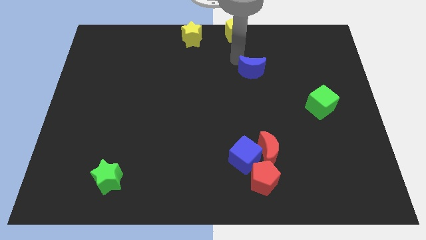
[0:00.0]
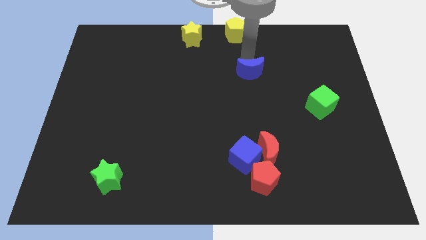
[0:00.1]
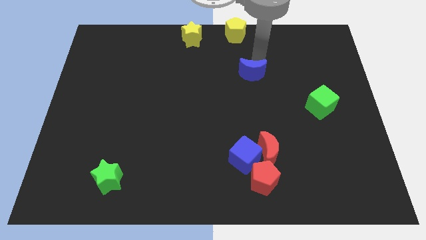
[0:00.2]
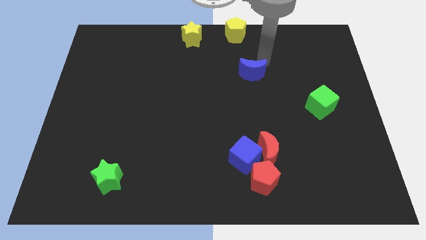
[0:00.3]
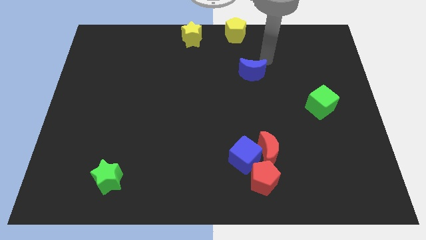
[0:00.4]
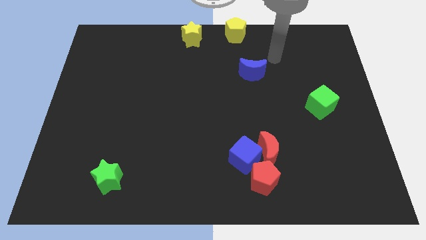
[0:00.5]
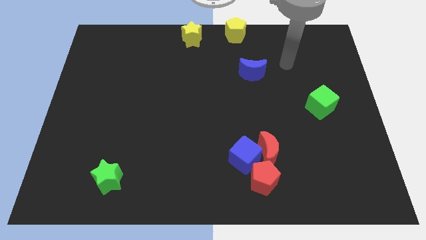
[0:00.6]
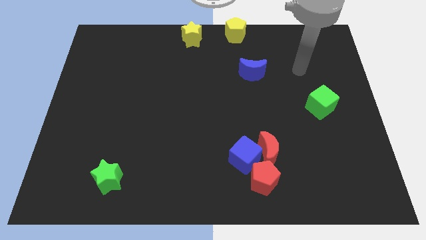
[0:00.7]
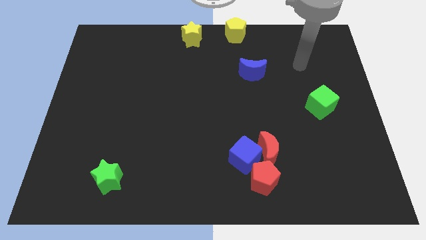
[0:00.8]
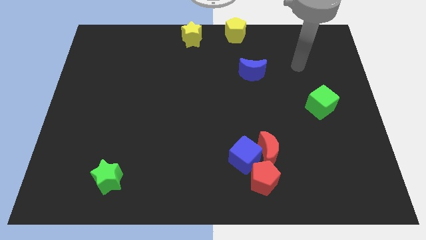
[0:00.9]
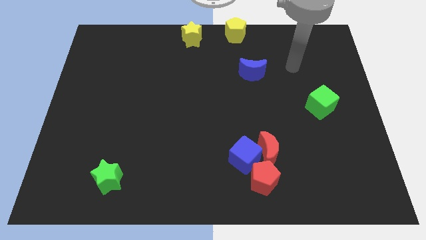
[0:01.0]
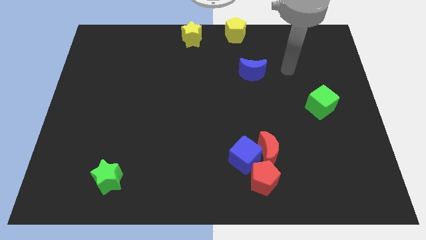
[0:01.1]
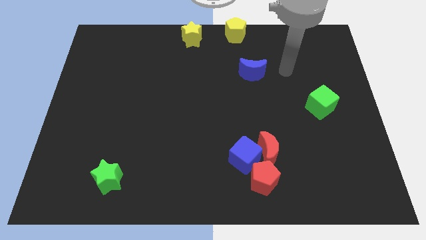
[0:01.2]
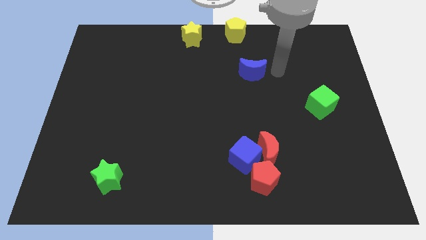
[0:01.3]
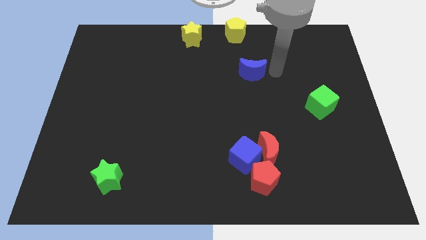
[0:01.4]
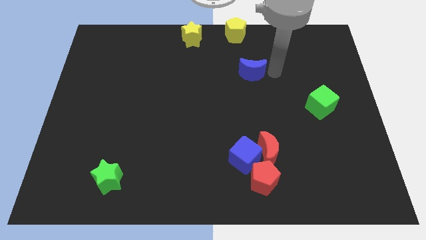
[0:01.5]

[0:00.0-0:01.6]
place the blue crescent below the yellow pentagon

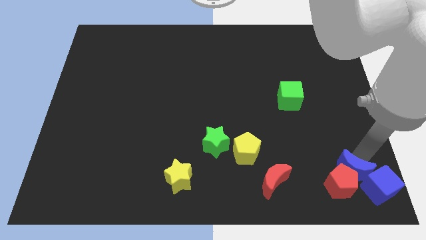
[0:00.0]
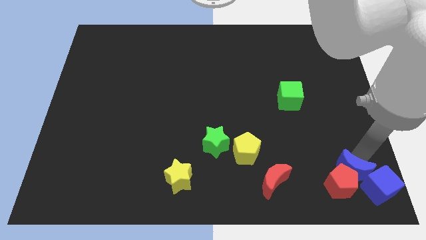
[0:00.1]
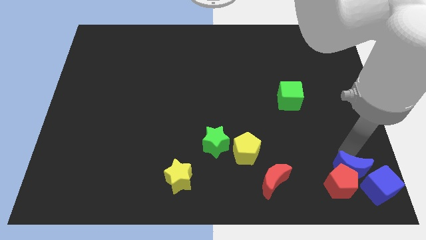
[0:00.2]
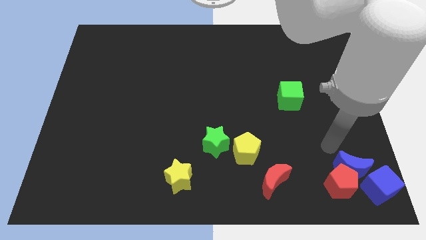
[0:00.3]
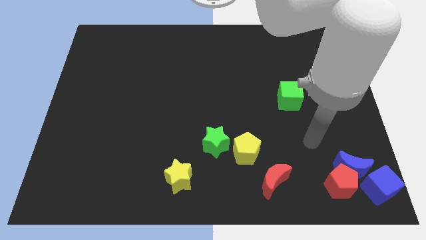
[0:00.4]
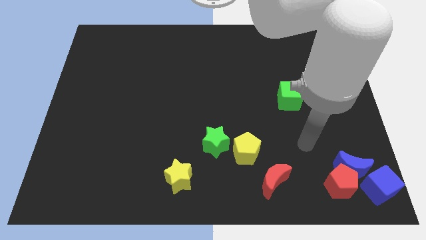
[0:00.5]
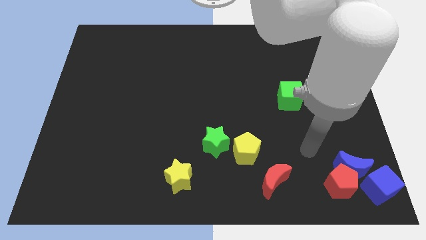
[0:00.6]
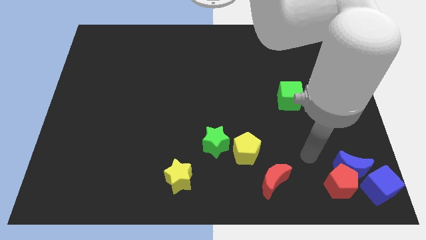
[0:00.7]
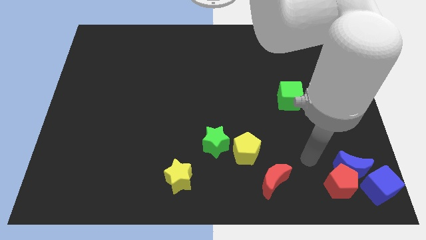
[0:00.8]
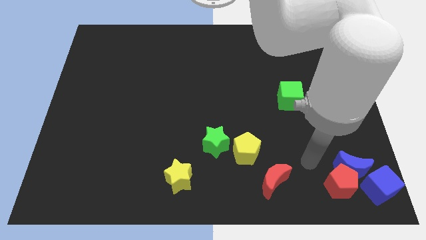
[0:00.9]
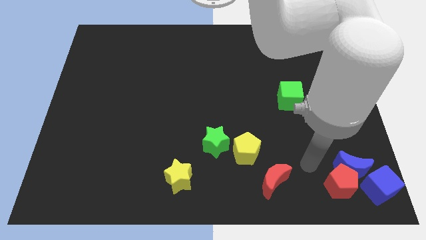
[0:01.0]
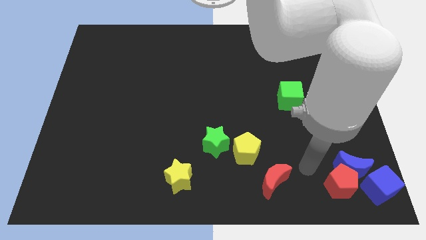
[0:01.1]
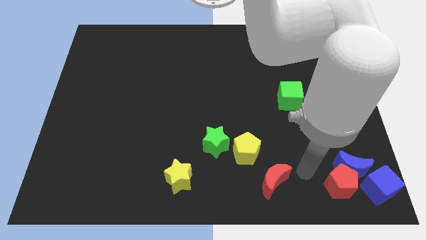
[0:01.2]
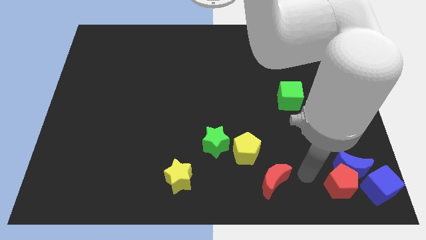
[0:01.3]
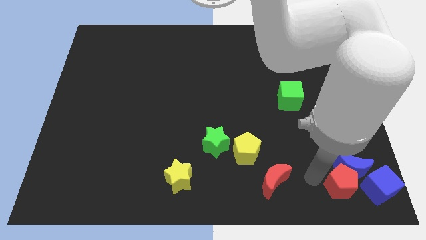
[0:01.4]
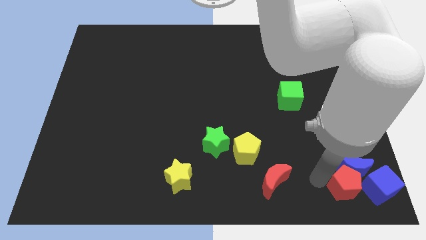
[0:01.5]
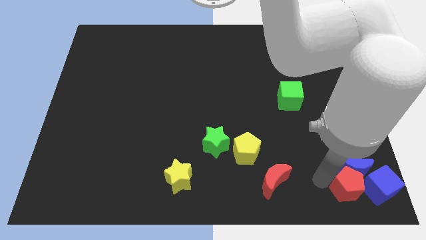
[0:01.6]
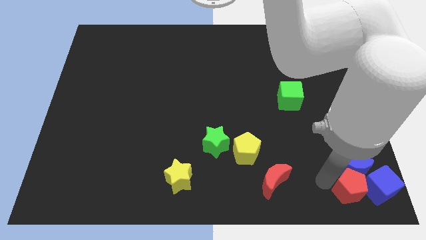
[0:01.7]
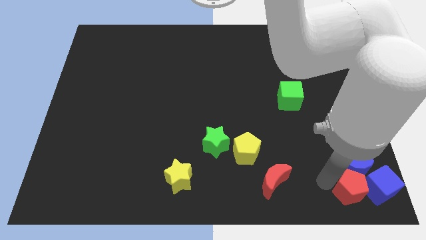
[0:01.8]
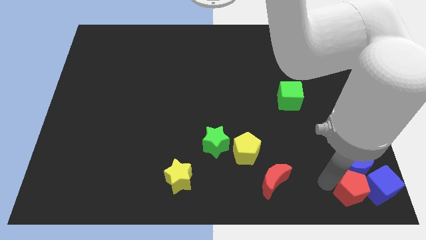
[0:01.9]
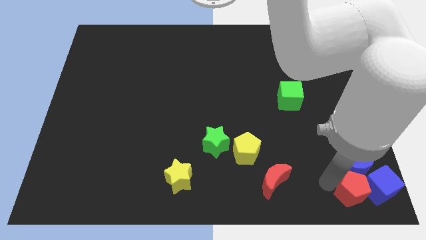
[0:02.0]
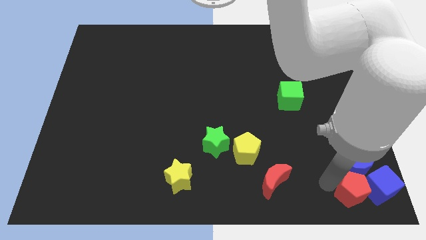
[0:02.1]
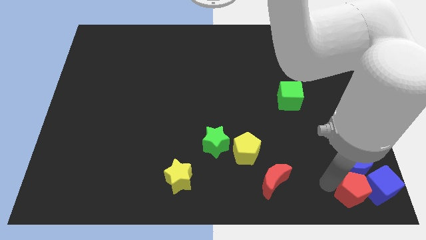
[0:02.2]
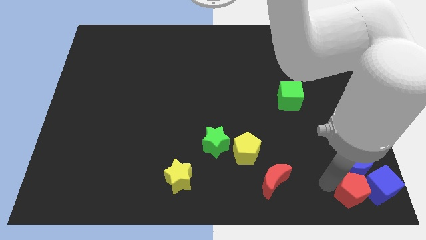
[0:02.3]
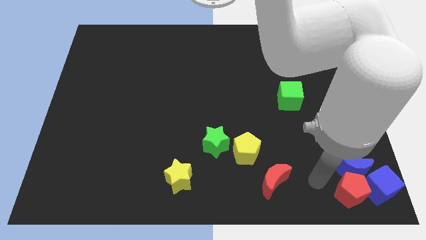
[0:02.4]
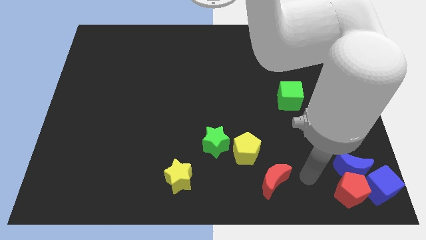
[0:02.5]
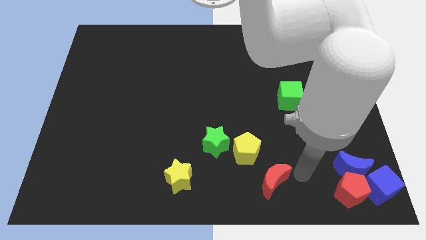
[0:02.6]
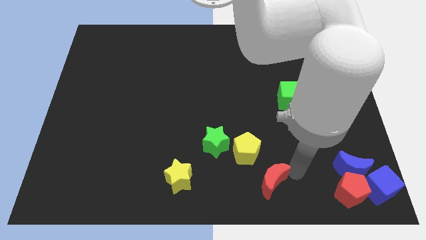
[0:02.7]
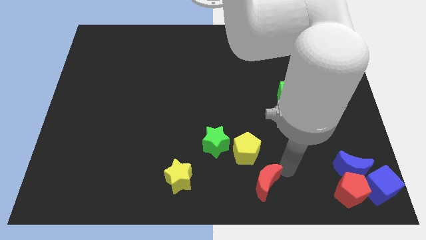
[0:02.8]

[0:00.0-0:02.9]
push red pentagon into blue cube

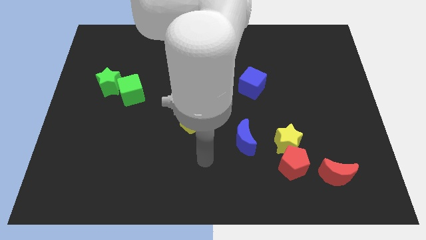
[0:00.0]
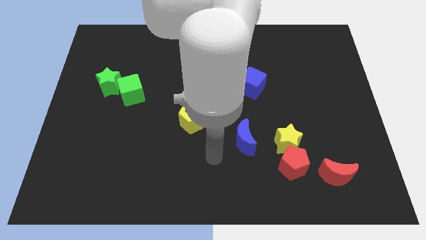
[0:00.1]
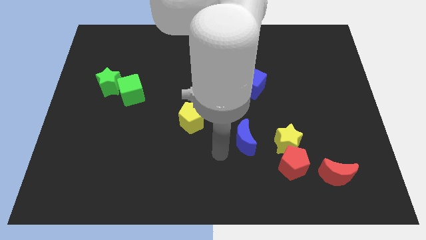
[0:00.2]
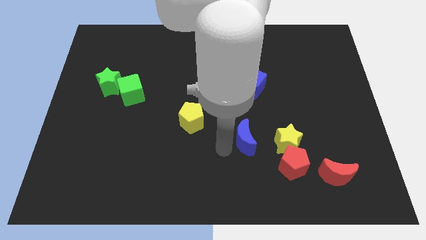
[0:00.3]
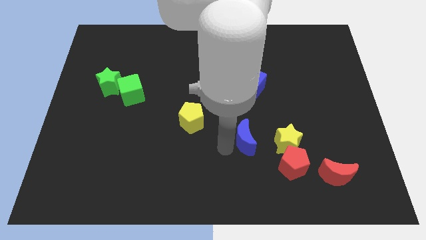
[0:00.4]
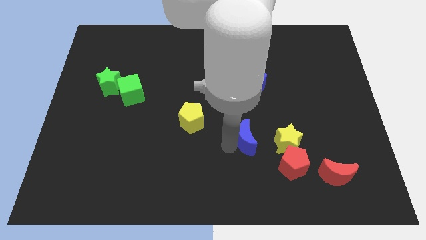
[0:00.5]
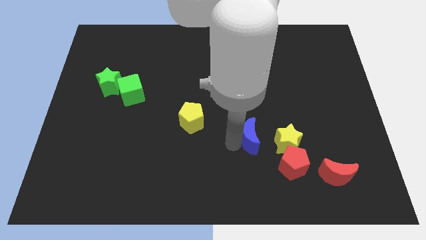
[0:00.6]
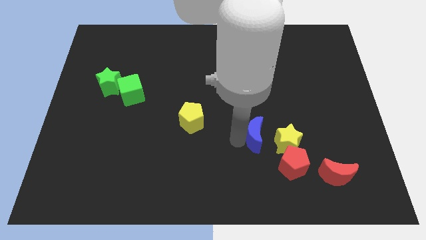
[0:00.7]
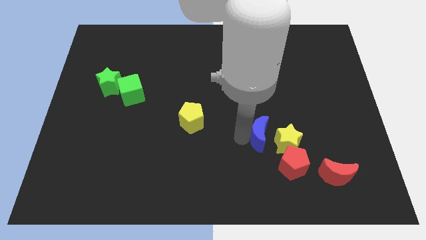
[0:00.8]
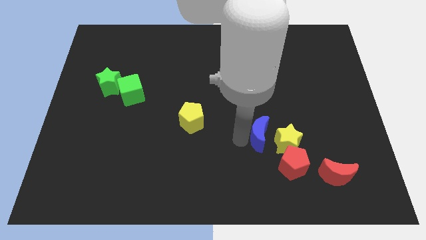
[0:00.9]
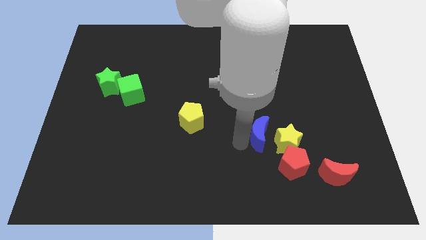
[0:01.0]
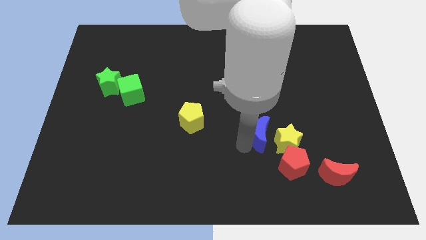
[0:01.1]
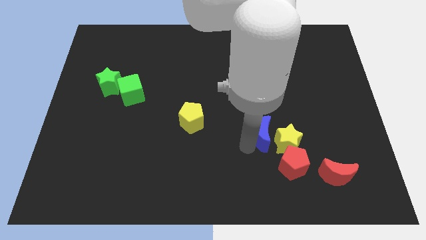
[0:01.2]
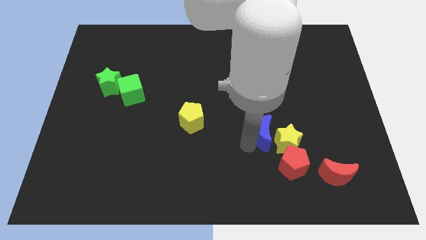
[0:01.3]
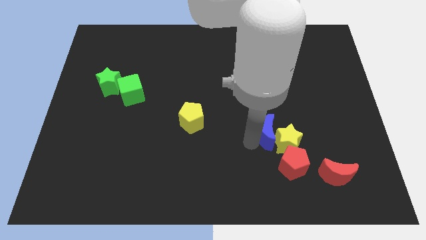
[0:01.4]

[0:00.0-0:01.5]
push the blue crescent into the yellow star

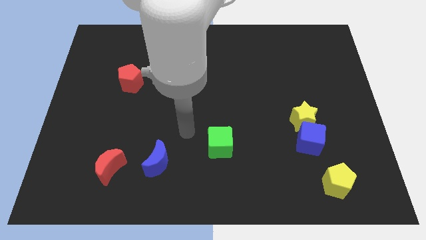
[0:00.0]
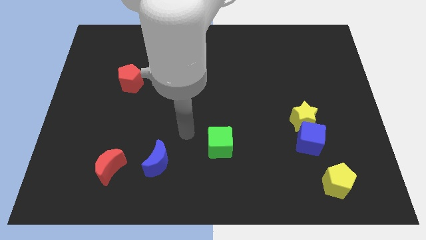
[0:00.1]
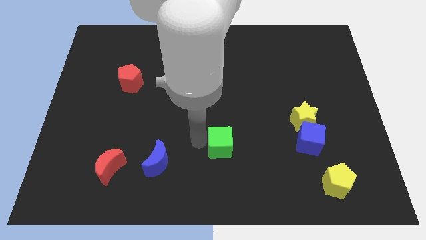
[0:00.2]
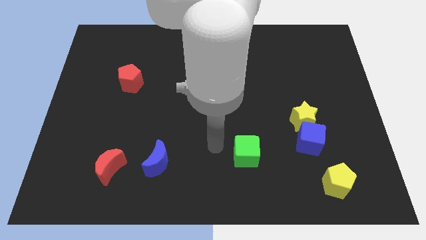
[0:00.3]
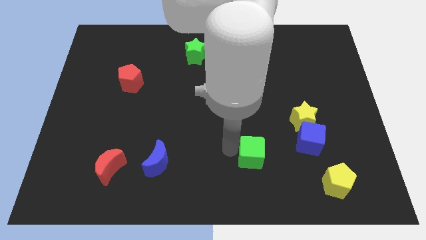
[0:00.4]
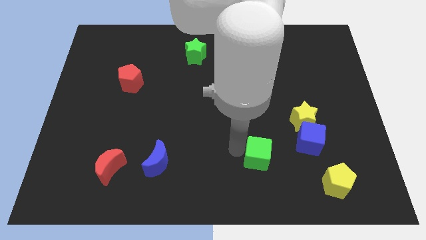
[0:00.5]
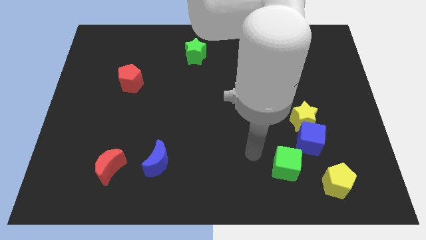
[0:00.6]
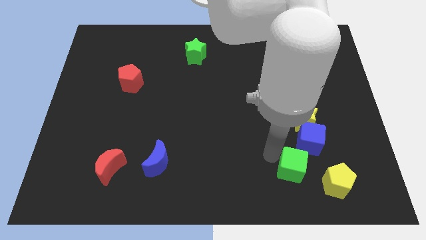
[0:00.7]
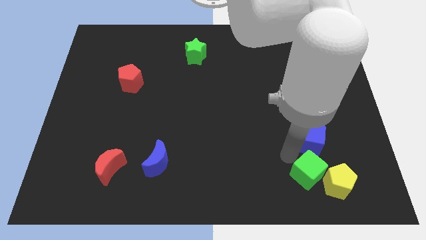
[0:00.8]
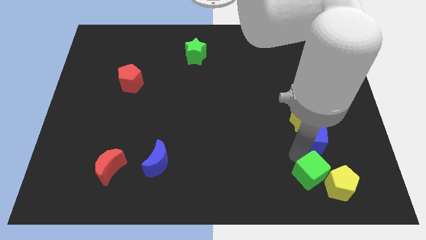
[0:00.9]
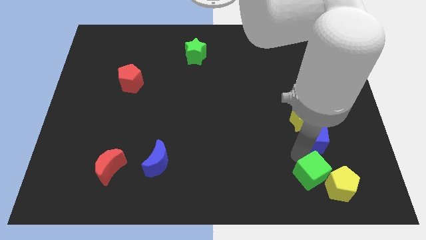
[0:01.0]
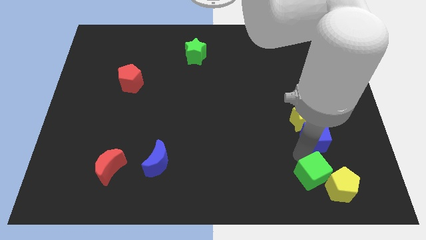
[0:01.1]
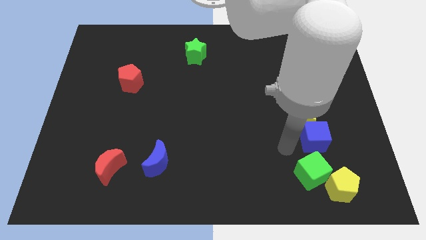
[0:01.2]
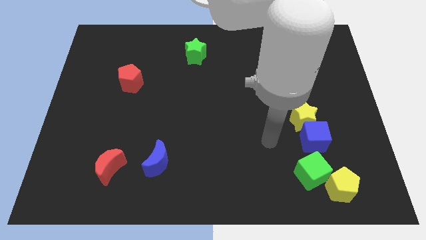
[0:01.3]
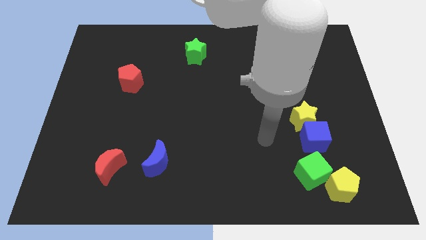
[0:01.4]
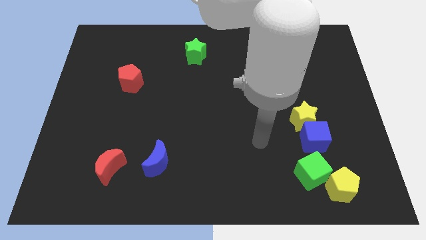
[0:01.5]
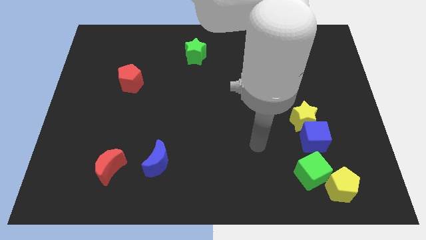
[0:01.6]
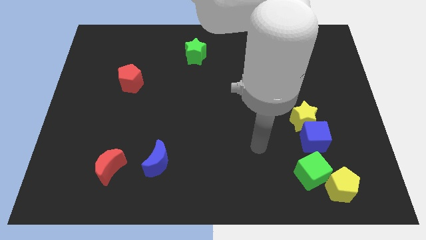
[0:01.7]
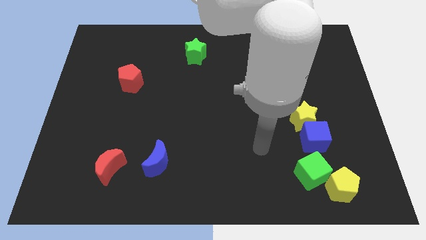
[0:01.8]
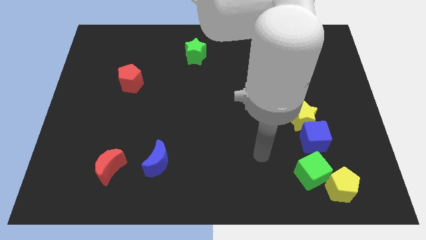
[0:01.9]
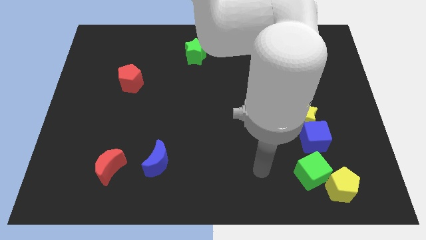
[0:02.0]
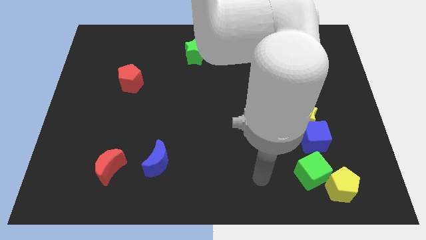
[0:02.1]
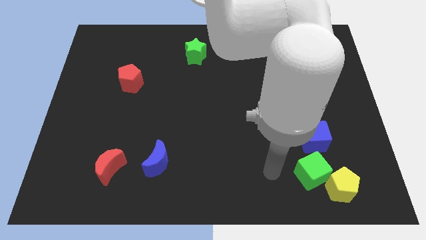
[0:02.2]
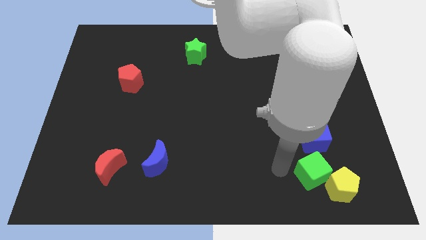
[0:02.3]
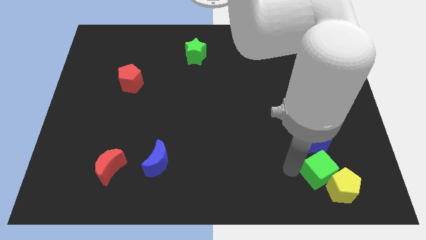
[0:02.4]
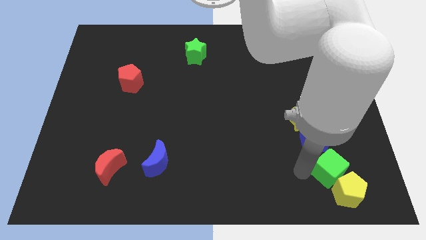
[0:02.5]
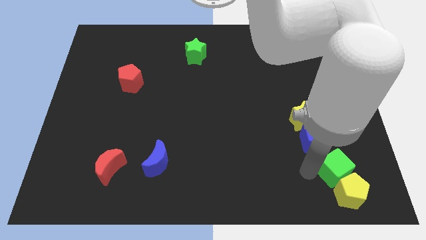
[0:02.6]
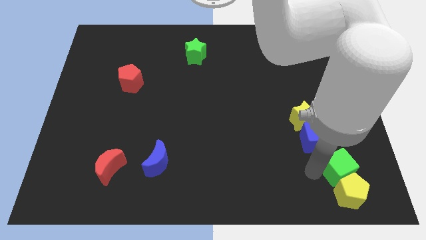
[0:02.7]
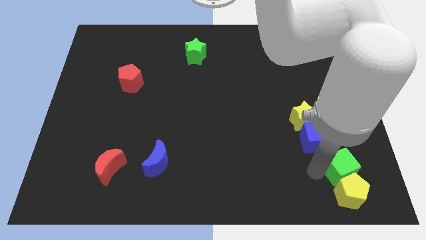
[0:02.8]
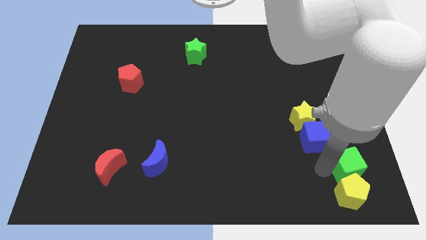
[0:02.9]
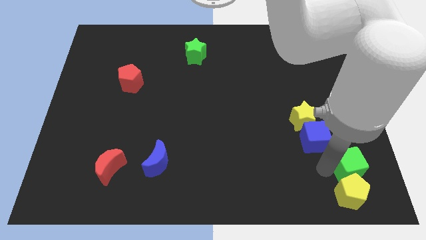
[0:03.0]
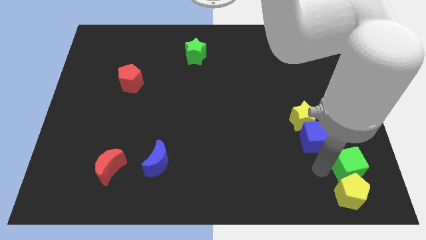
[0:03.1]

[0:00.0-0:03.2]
push the cubes and yellow pentagon towards the right side of the board
